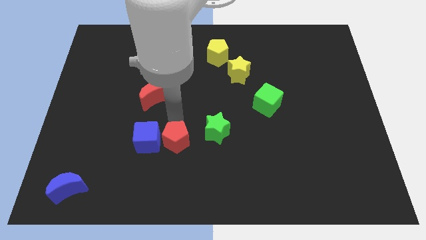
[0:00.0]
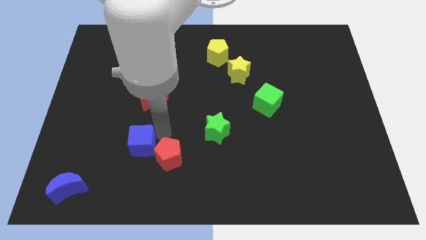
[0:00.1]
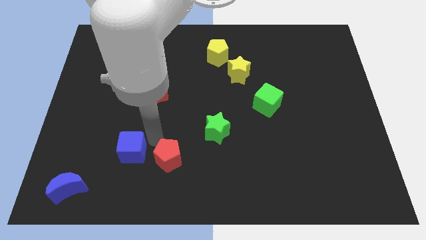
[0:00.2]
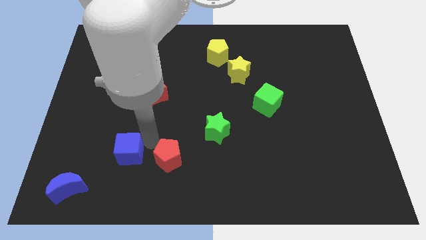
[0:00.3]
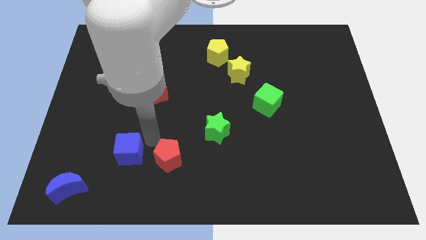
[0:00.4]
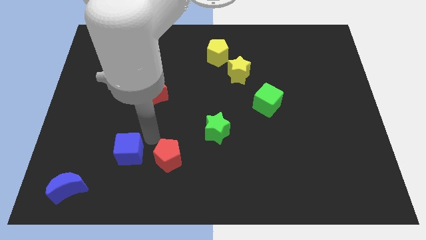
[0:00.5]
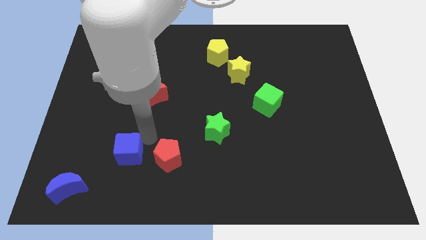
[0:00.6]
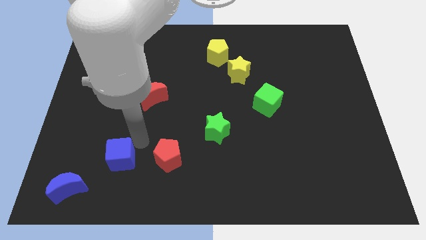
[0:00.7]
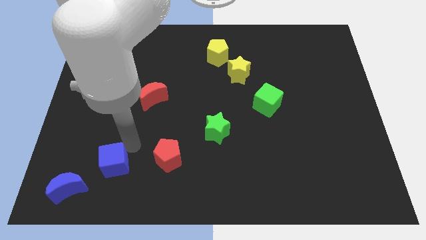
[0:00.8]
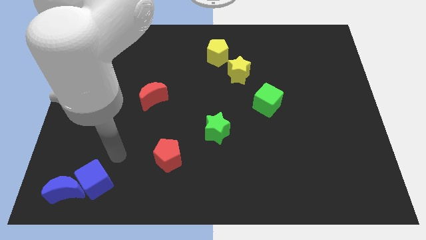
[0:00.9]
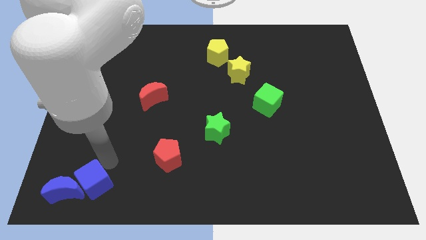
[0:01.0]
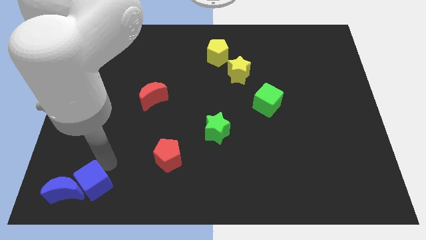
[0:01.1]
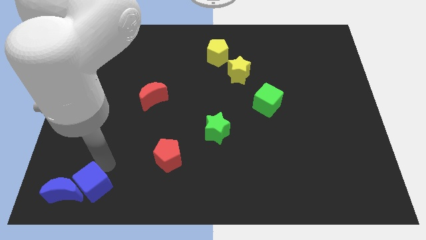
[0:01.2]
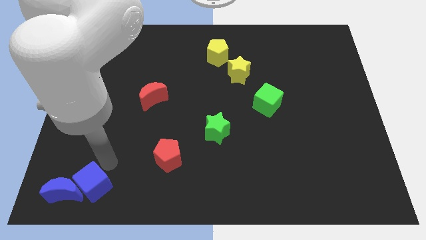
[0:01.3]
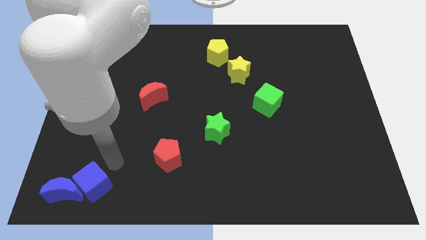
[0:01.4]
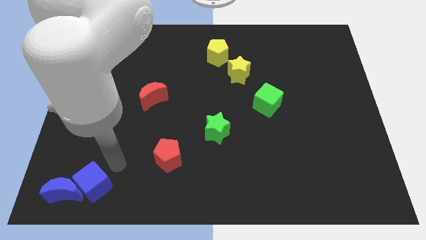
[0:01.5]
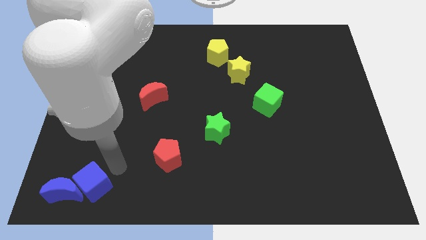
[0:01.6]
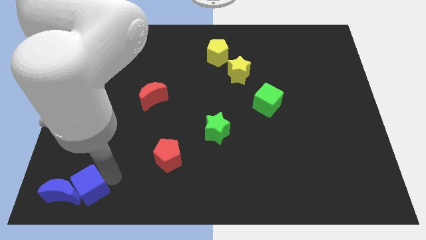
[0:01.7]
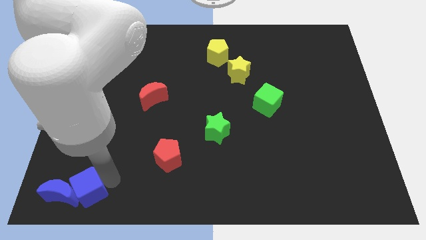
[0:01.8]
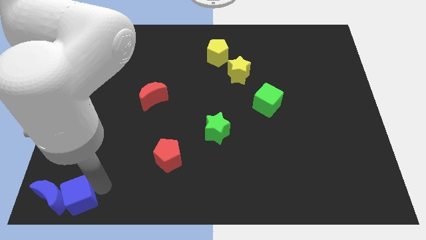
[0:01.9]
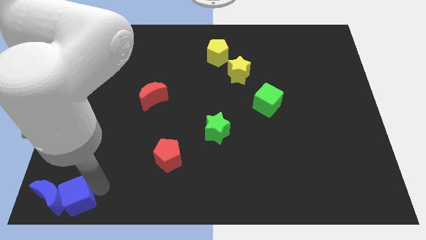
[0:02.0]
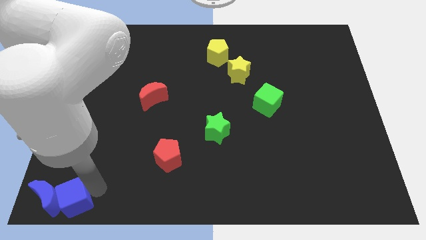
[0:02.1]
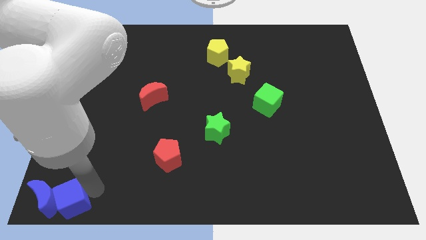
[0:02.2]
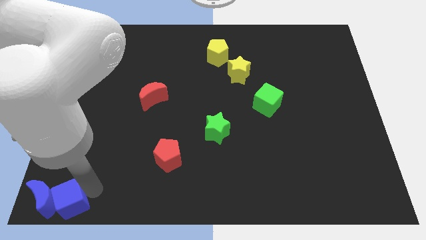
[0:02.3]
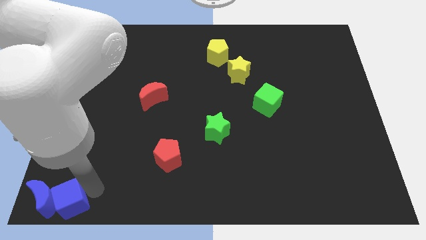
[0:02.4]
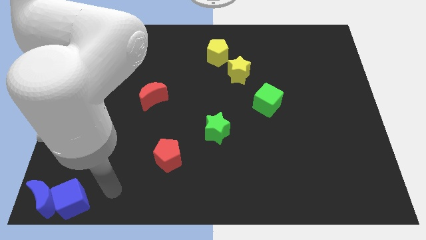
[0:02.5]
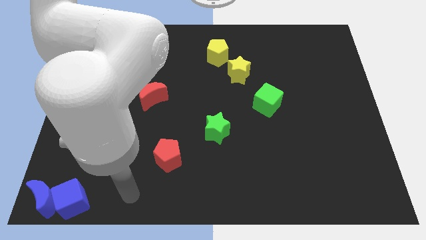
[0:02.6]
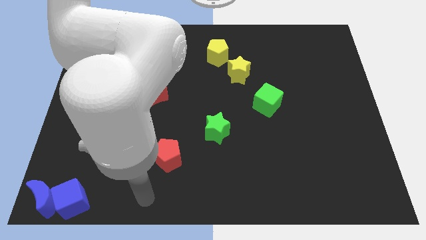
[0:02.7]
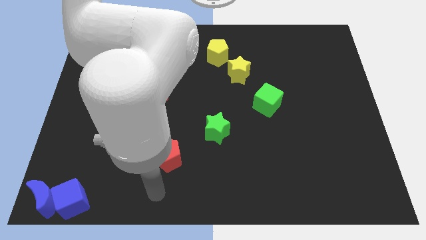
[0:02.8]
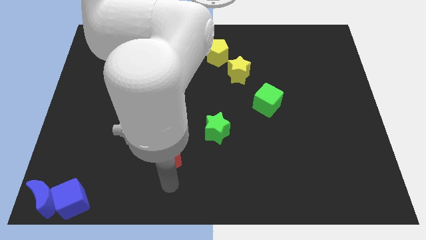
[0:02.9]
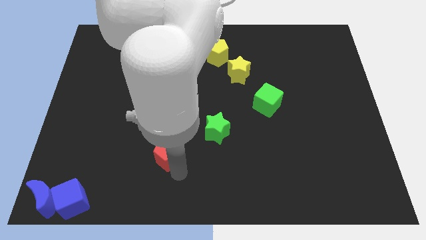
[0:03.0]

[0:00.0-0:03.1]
separate blue cube from red pentagon

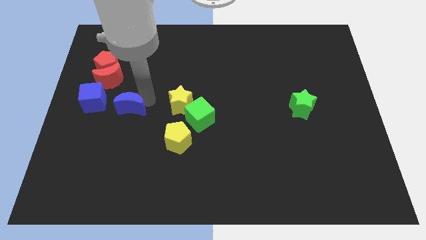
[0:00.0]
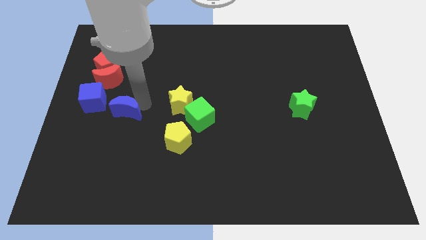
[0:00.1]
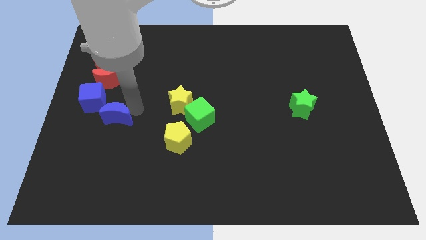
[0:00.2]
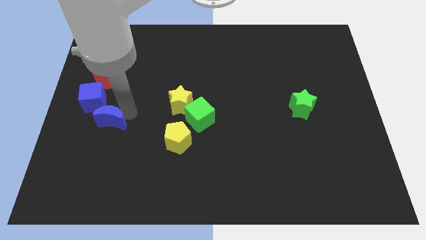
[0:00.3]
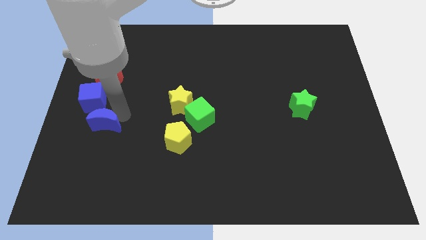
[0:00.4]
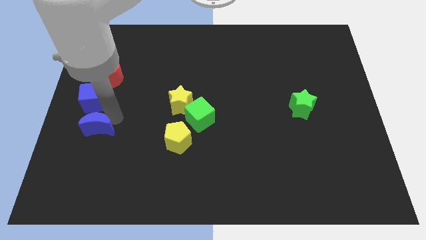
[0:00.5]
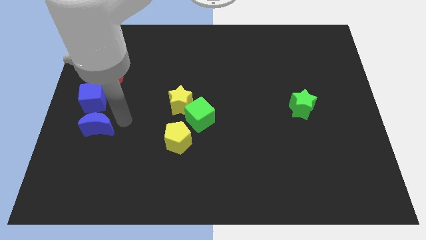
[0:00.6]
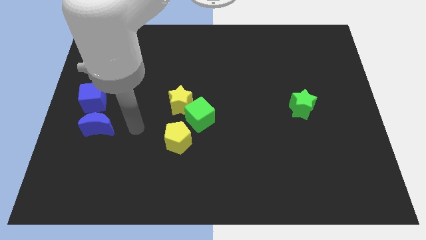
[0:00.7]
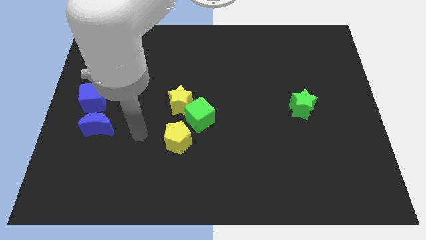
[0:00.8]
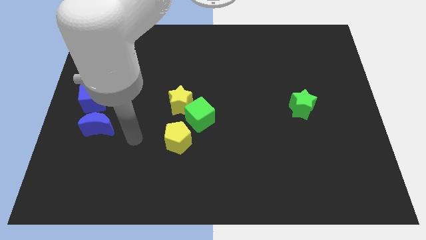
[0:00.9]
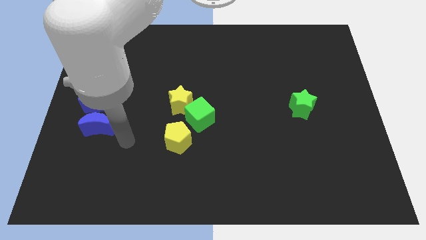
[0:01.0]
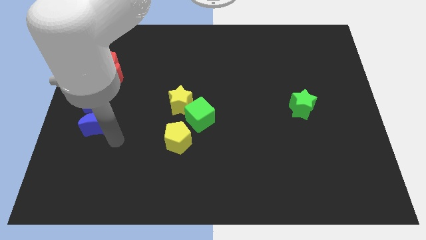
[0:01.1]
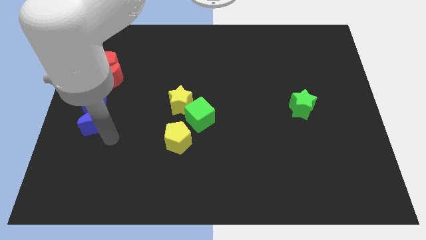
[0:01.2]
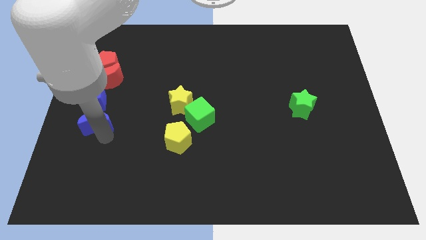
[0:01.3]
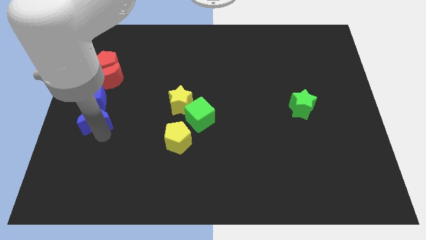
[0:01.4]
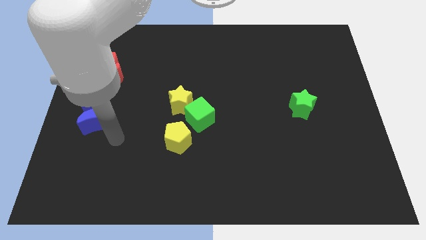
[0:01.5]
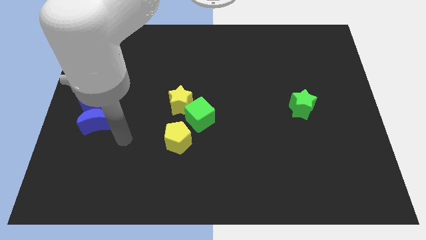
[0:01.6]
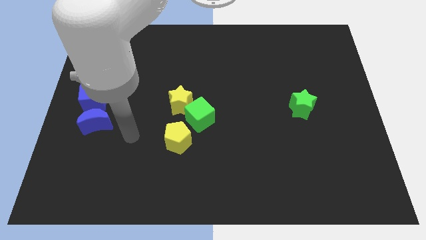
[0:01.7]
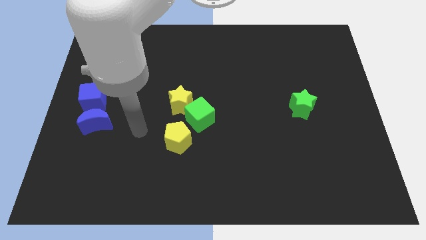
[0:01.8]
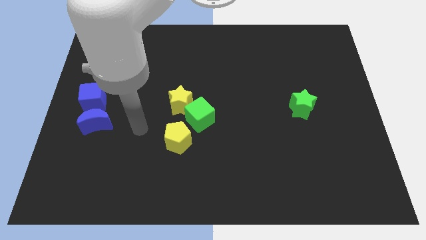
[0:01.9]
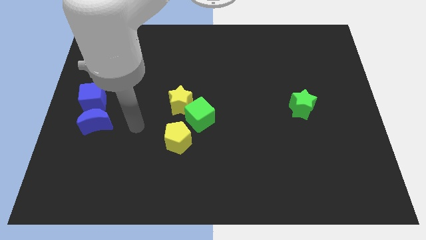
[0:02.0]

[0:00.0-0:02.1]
move the blue moon to the bottom side of the blue cube

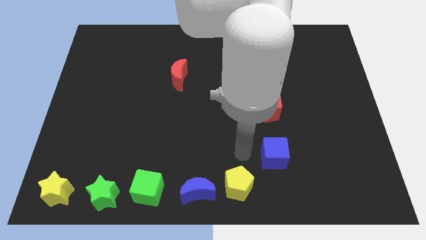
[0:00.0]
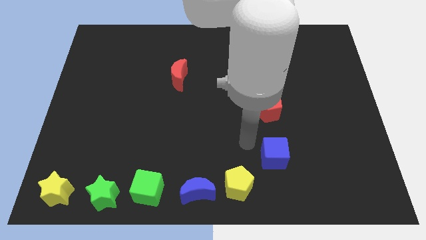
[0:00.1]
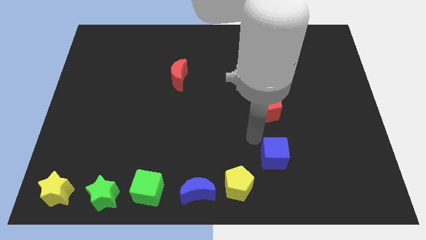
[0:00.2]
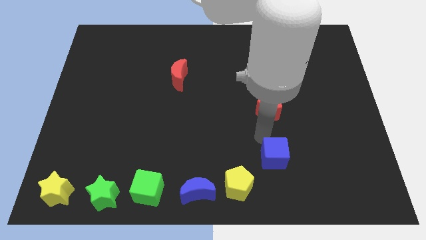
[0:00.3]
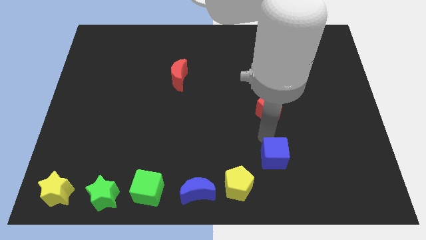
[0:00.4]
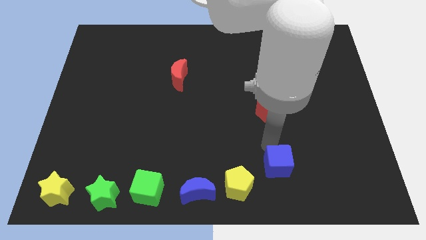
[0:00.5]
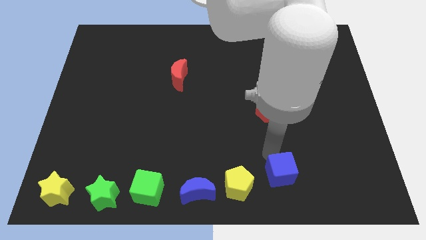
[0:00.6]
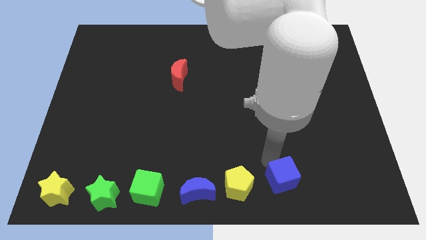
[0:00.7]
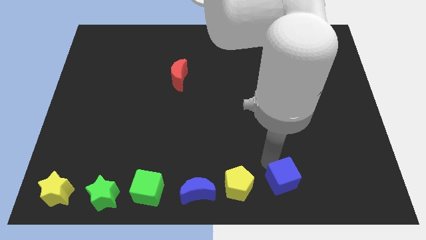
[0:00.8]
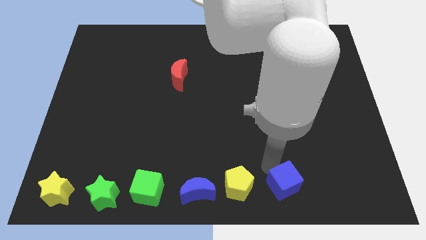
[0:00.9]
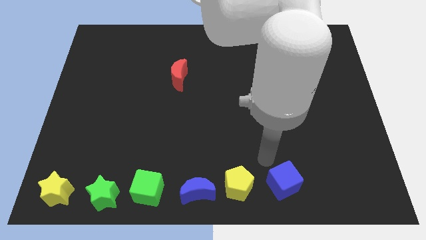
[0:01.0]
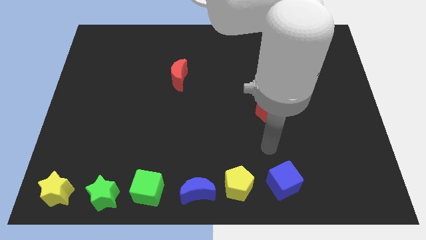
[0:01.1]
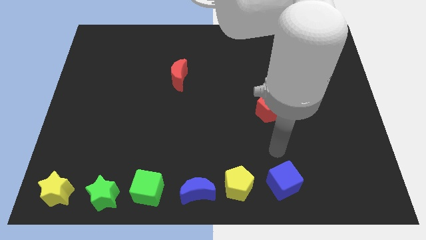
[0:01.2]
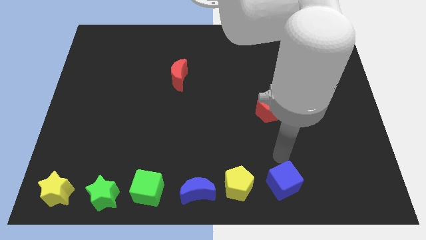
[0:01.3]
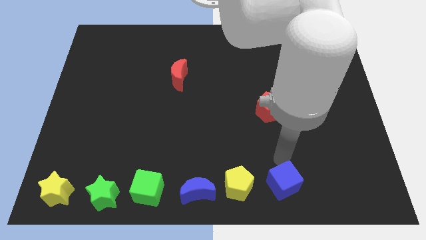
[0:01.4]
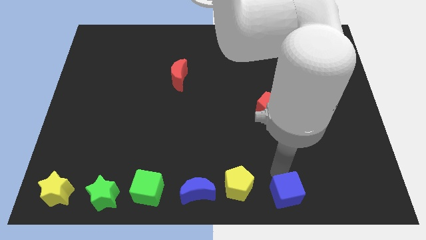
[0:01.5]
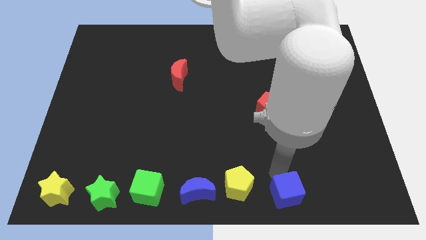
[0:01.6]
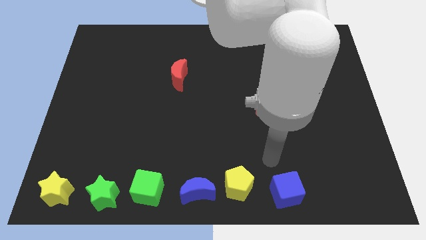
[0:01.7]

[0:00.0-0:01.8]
move the blue cube in a horizontal line right to the yellow pentagon

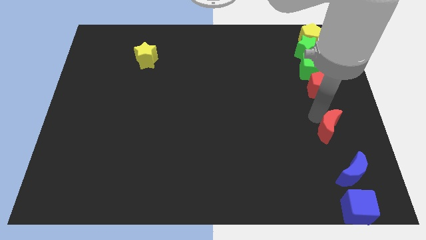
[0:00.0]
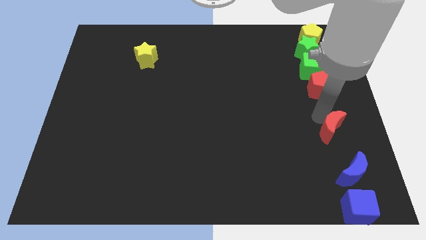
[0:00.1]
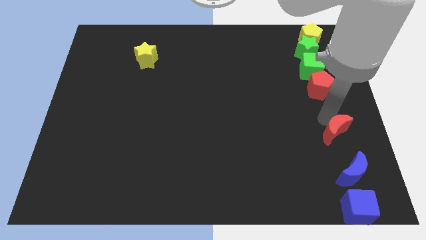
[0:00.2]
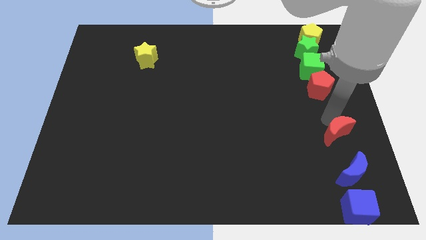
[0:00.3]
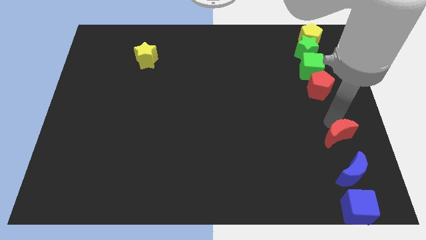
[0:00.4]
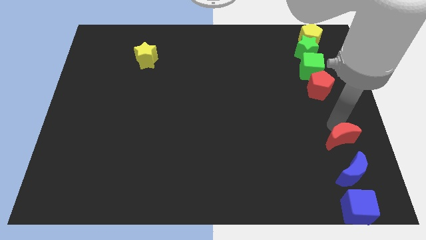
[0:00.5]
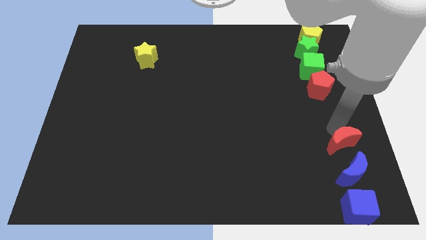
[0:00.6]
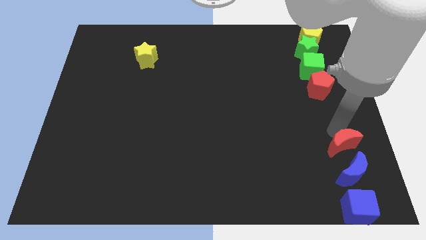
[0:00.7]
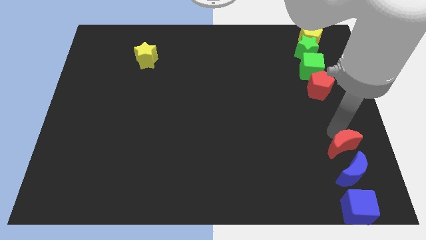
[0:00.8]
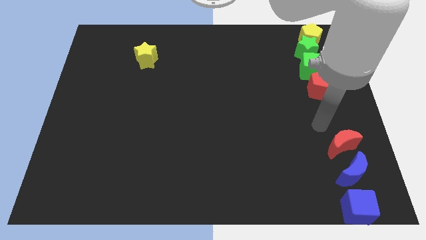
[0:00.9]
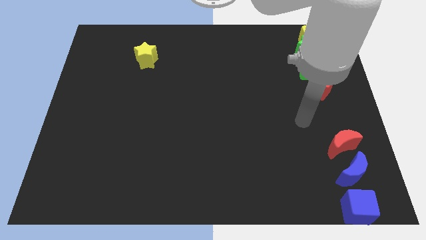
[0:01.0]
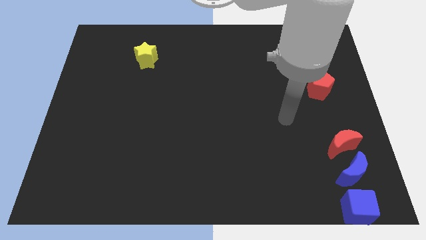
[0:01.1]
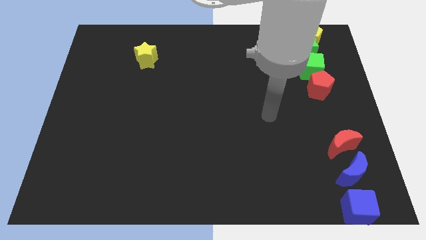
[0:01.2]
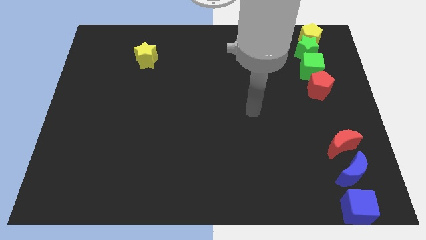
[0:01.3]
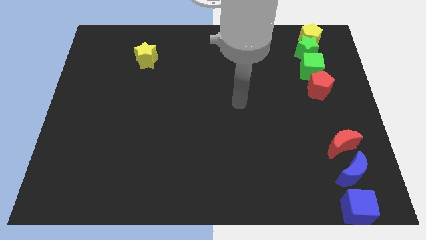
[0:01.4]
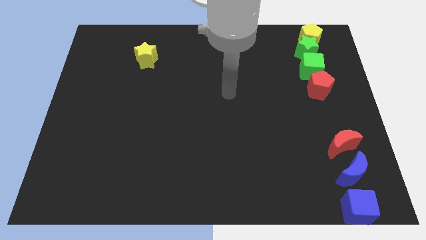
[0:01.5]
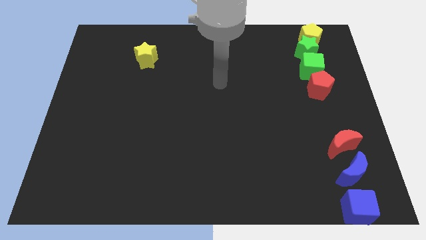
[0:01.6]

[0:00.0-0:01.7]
place red moon to the top of the blue moon

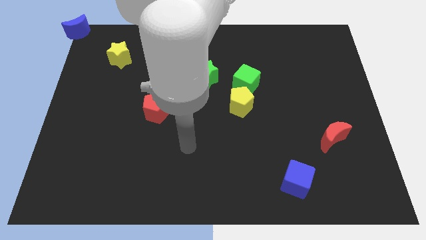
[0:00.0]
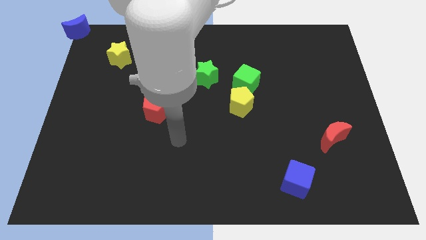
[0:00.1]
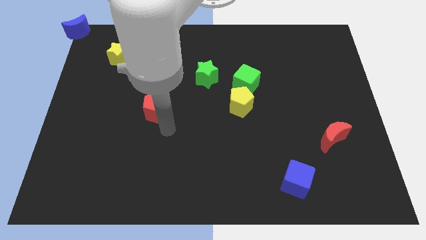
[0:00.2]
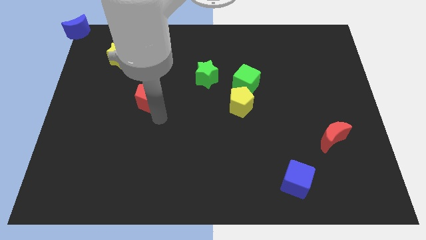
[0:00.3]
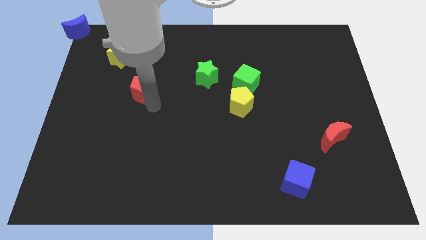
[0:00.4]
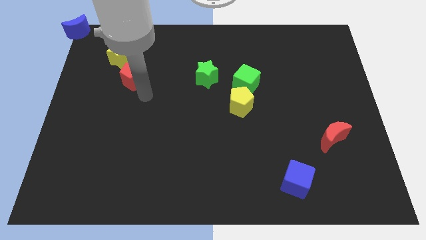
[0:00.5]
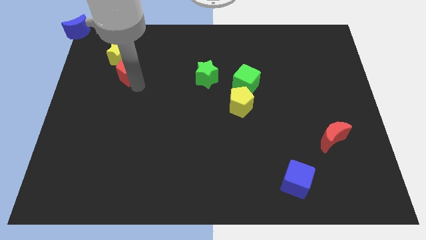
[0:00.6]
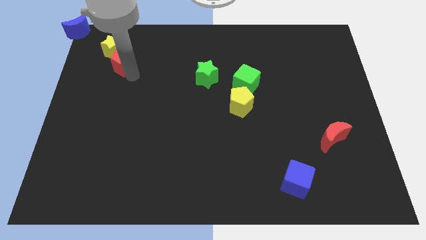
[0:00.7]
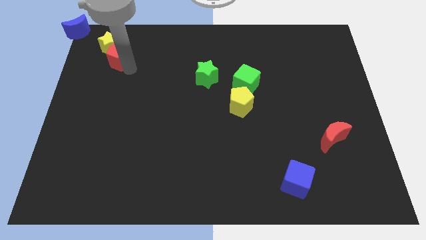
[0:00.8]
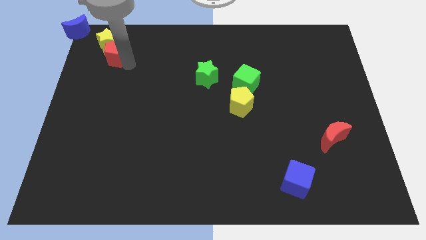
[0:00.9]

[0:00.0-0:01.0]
push the red pentagon into the yellow star
